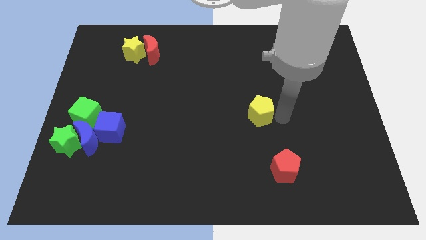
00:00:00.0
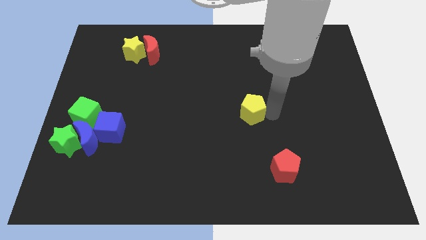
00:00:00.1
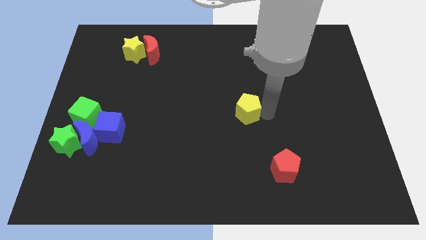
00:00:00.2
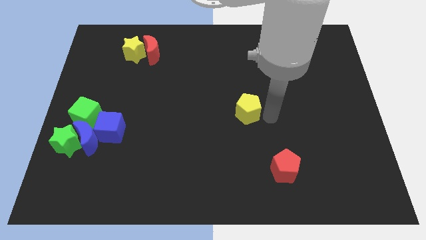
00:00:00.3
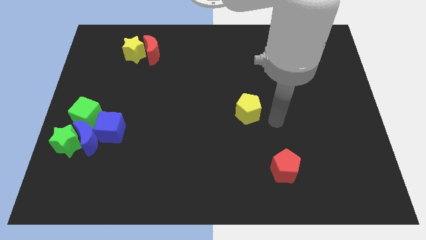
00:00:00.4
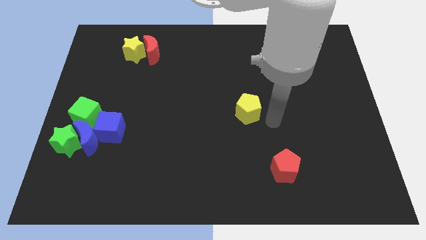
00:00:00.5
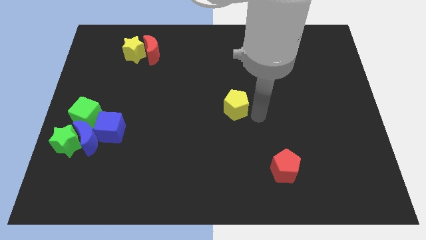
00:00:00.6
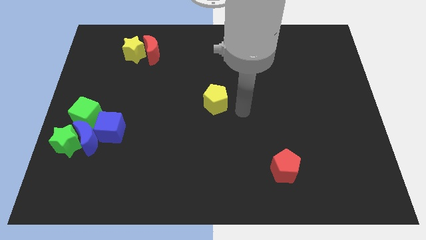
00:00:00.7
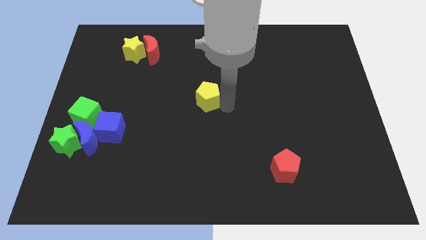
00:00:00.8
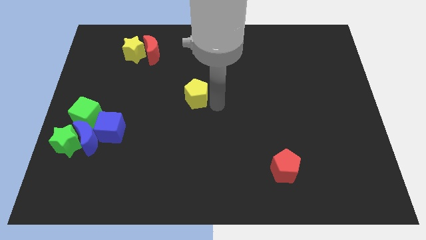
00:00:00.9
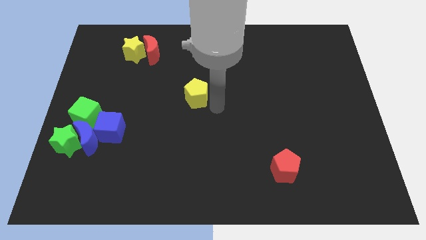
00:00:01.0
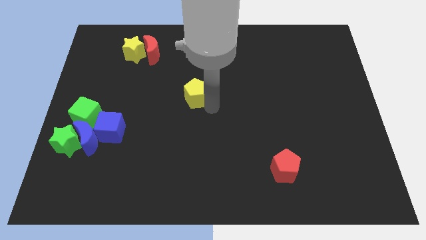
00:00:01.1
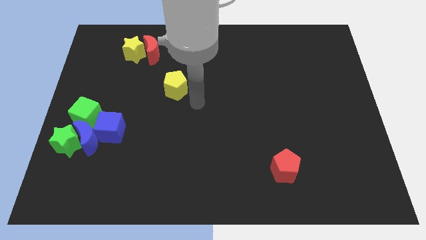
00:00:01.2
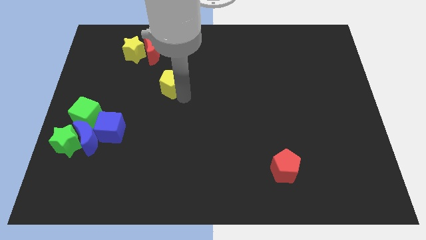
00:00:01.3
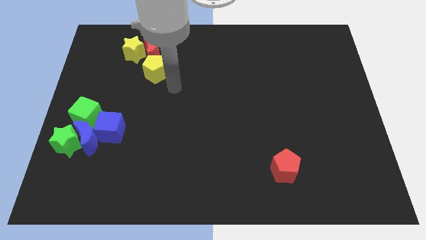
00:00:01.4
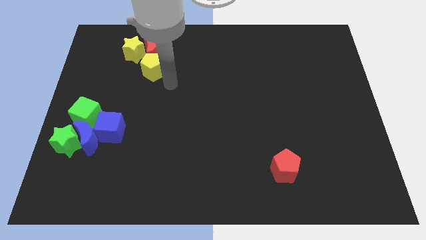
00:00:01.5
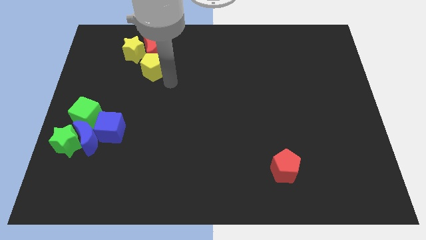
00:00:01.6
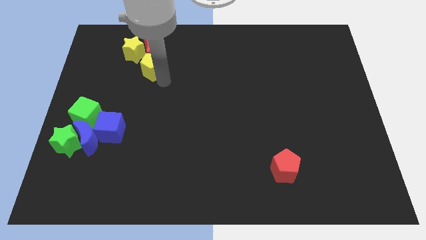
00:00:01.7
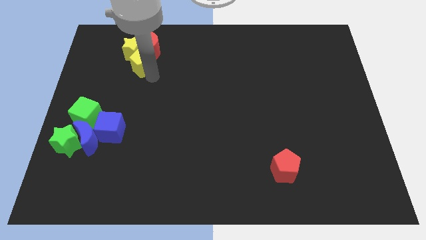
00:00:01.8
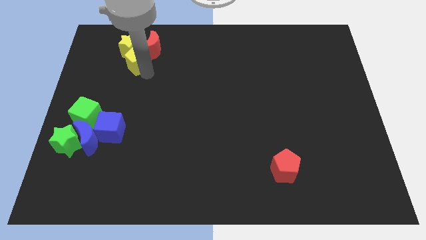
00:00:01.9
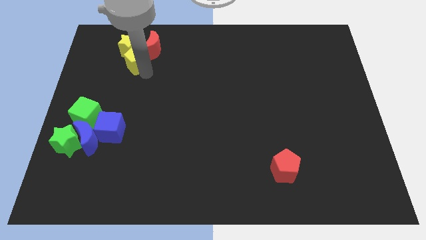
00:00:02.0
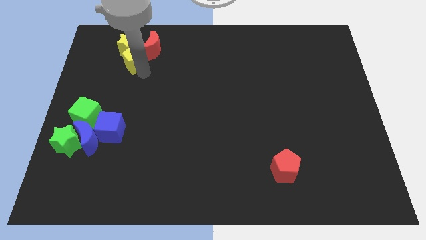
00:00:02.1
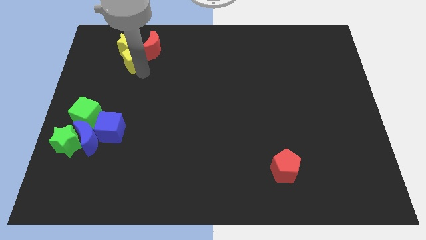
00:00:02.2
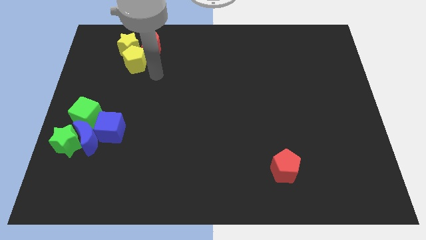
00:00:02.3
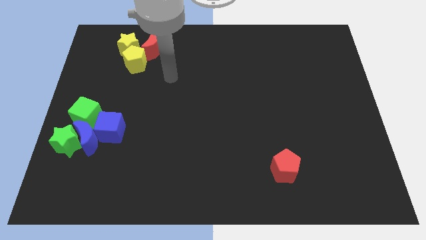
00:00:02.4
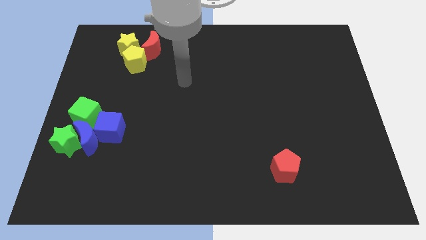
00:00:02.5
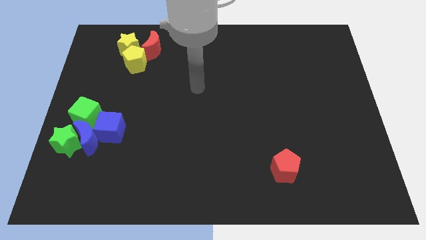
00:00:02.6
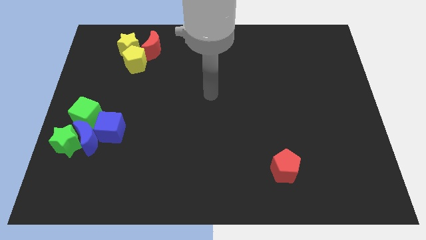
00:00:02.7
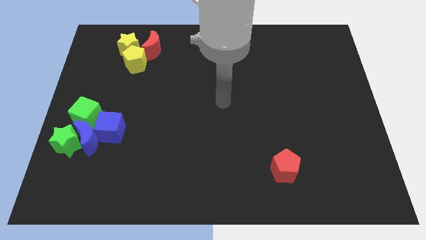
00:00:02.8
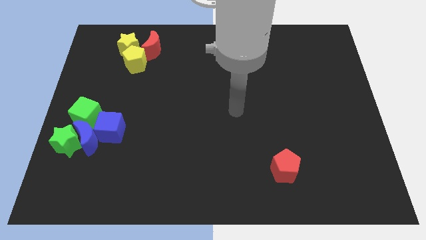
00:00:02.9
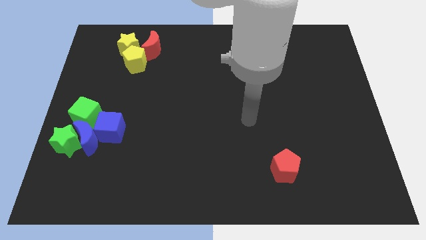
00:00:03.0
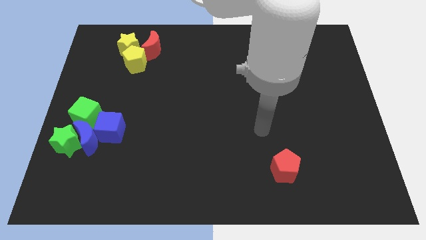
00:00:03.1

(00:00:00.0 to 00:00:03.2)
move the yellow pentagon towards the yellow satr

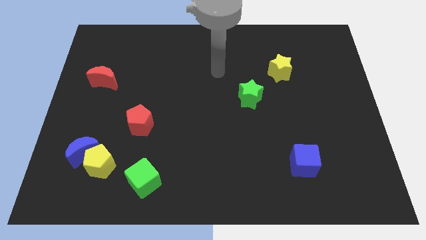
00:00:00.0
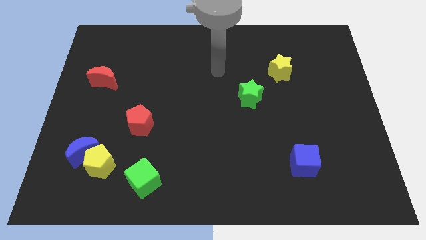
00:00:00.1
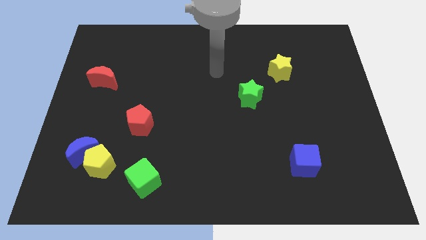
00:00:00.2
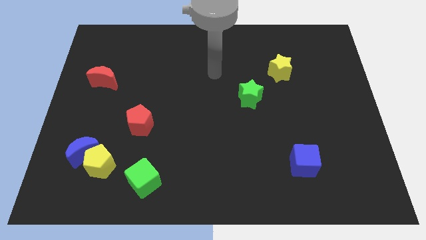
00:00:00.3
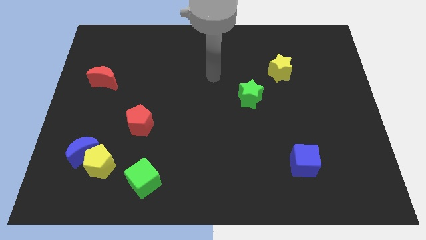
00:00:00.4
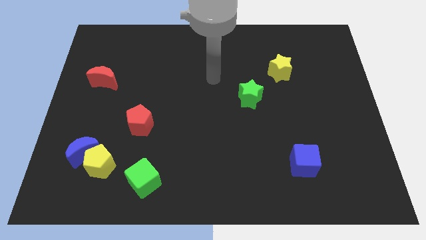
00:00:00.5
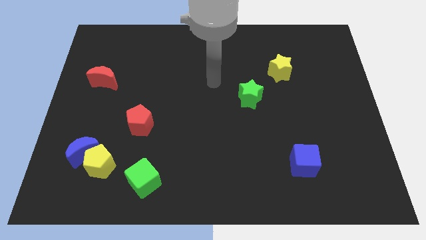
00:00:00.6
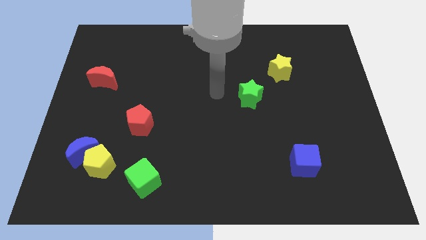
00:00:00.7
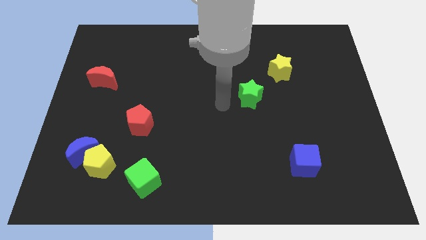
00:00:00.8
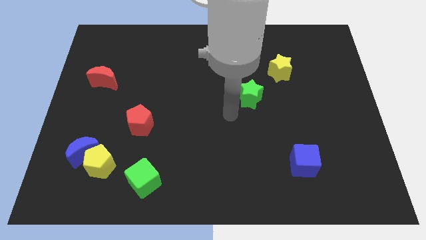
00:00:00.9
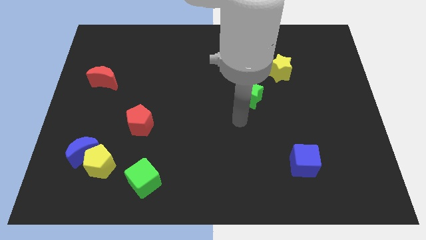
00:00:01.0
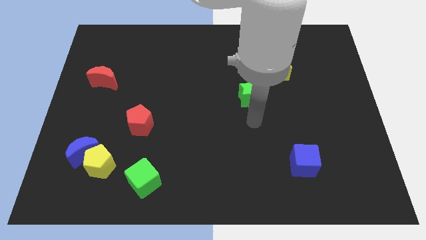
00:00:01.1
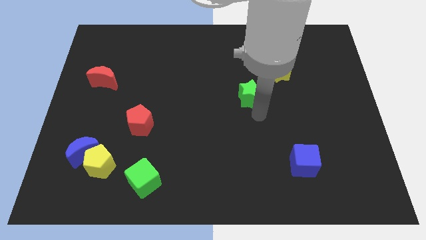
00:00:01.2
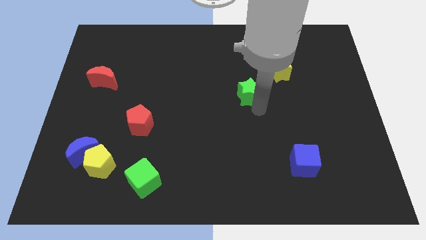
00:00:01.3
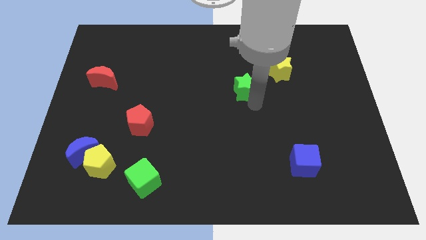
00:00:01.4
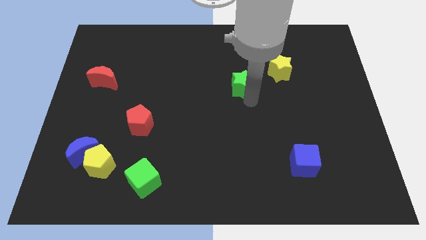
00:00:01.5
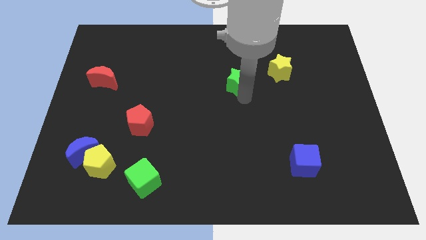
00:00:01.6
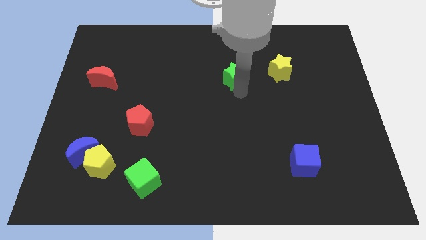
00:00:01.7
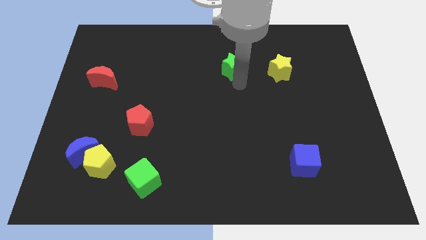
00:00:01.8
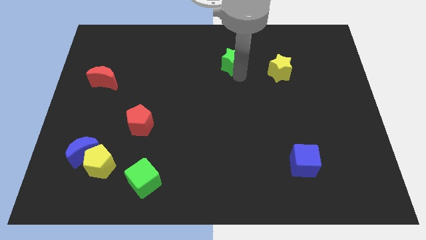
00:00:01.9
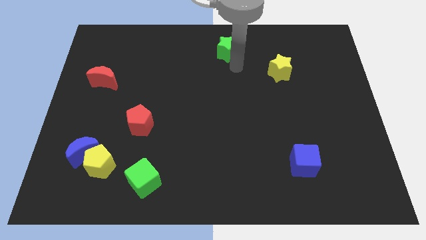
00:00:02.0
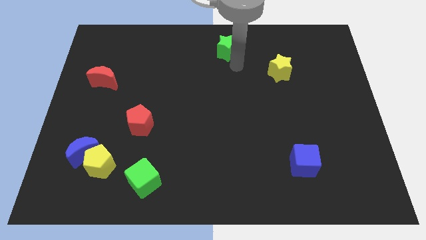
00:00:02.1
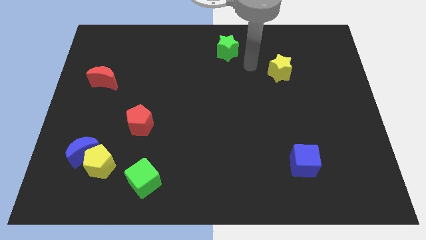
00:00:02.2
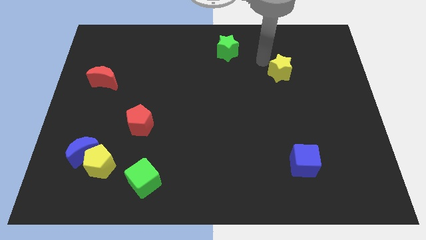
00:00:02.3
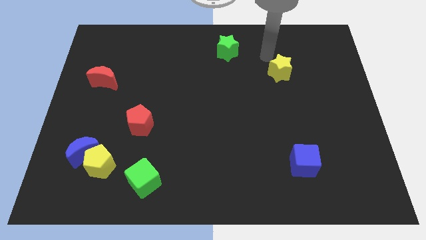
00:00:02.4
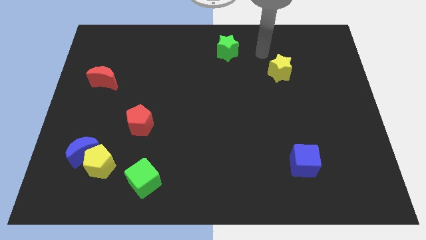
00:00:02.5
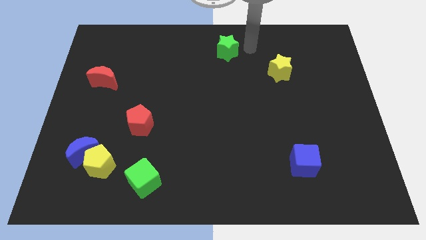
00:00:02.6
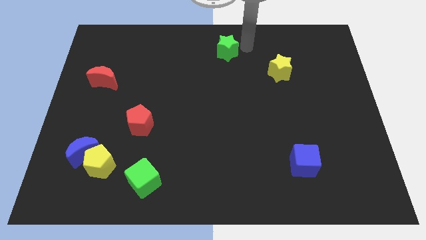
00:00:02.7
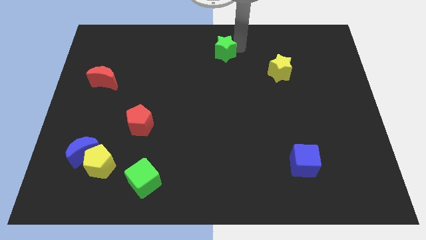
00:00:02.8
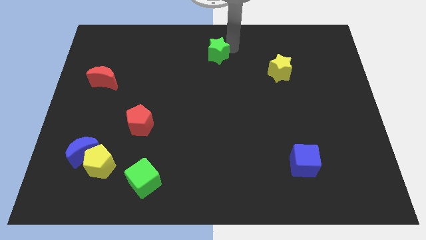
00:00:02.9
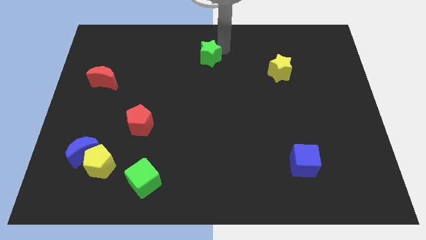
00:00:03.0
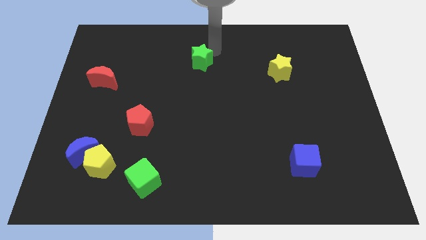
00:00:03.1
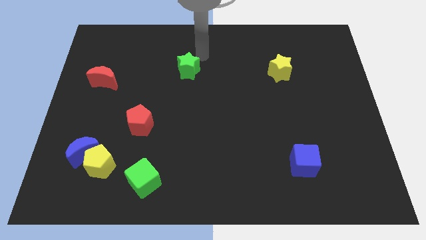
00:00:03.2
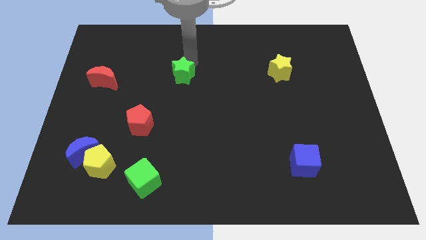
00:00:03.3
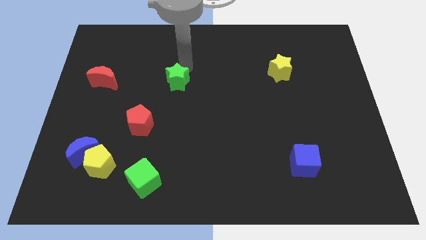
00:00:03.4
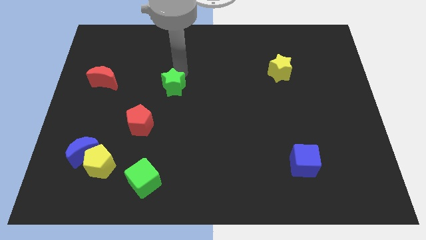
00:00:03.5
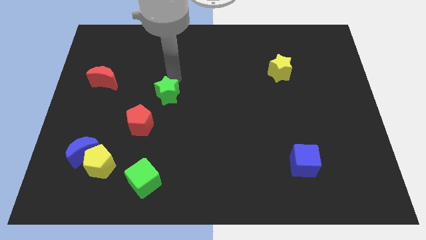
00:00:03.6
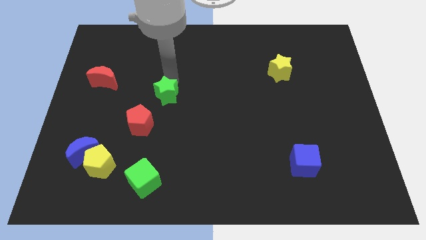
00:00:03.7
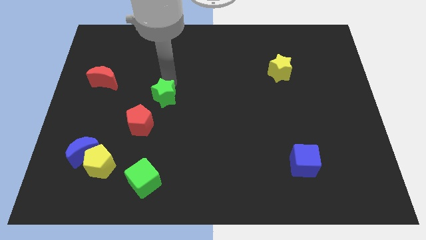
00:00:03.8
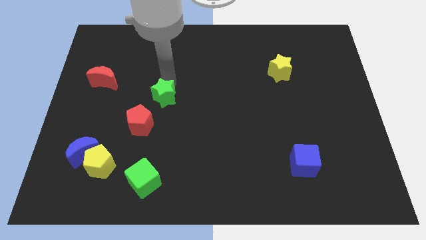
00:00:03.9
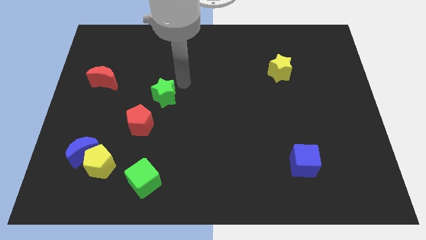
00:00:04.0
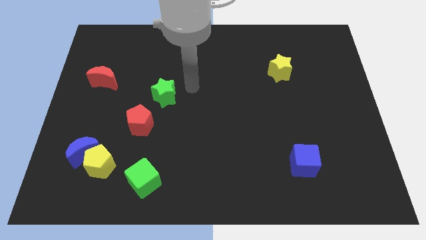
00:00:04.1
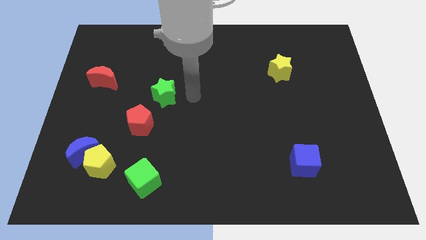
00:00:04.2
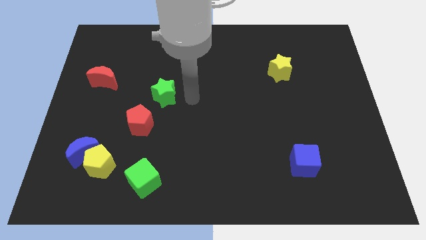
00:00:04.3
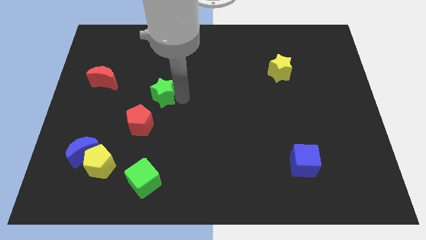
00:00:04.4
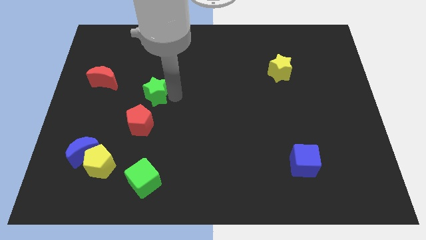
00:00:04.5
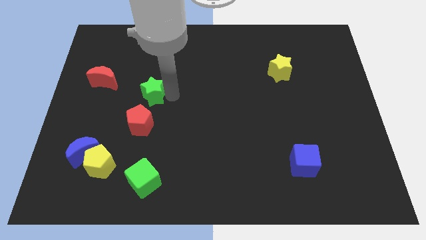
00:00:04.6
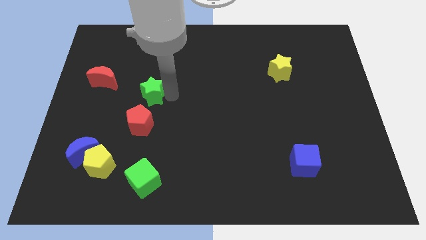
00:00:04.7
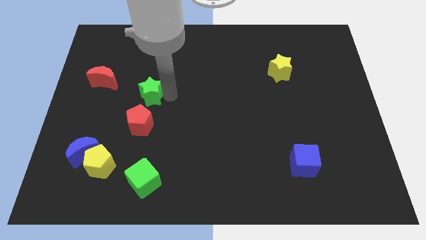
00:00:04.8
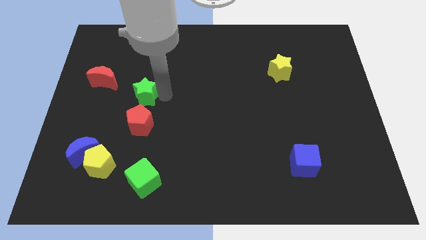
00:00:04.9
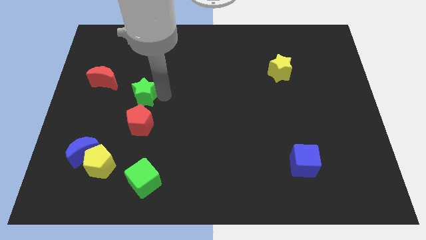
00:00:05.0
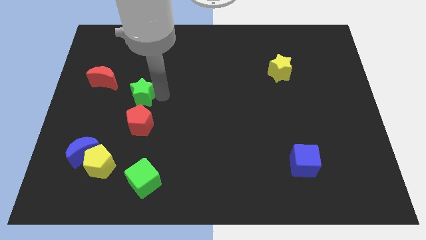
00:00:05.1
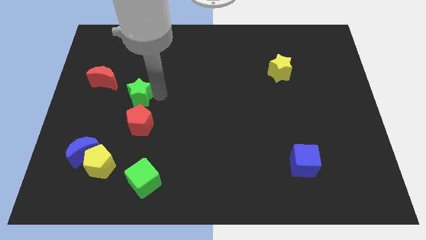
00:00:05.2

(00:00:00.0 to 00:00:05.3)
push the green star above the red pentagon

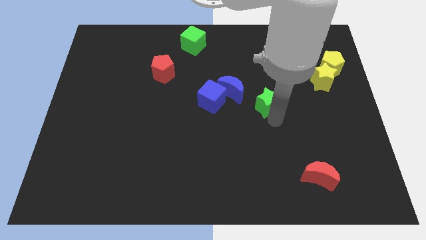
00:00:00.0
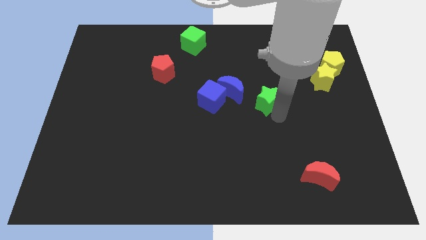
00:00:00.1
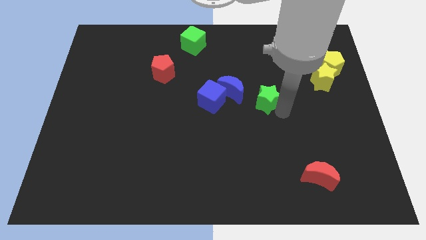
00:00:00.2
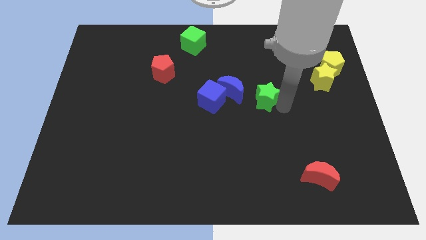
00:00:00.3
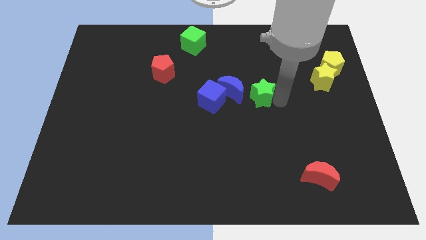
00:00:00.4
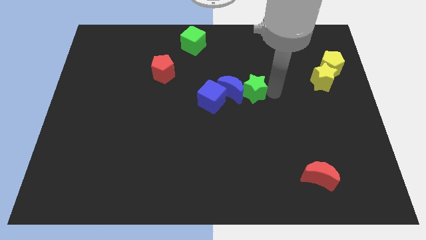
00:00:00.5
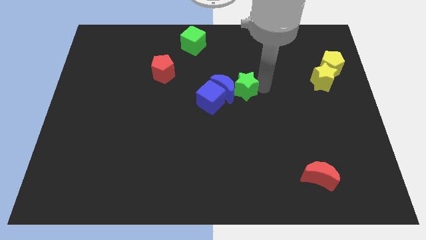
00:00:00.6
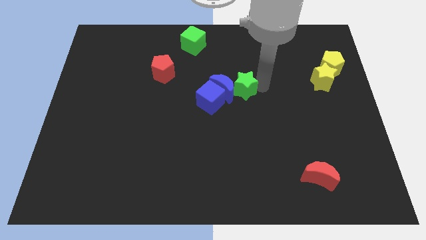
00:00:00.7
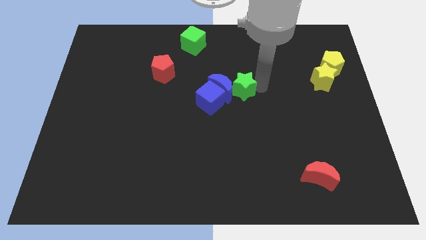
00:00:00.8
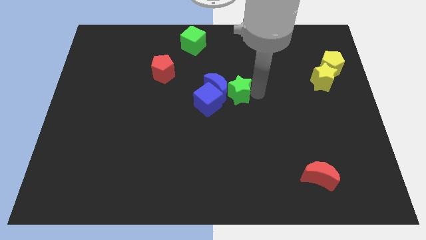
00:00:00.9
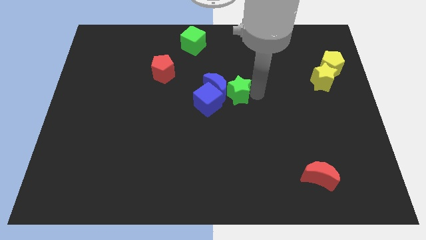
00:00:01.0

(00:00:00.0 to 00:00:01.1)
push the green star into the blue crescent
